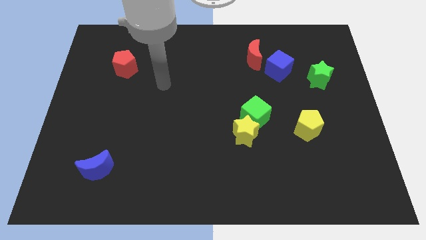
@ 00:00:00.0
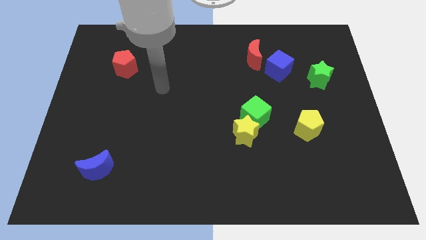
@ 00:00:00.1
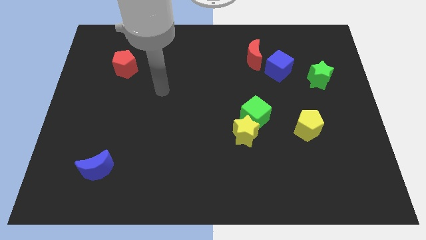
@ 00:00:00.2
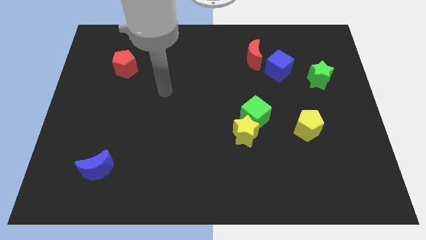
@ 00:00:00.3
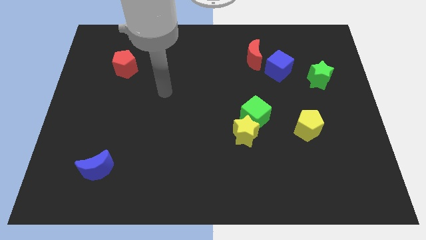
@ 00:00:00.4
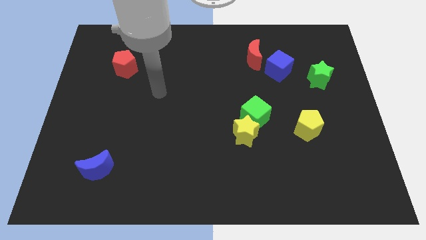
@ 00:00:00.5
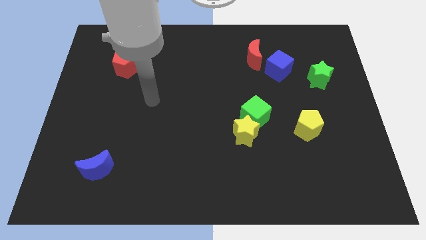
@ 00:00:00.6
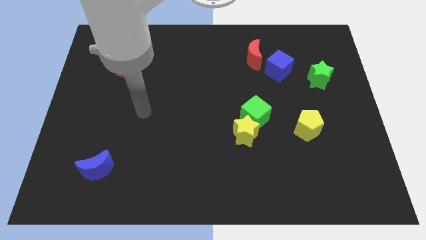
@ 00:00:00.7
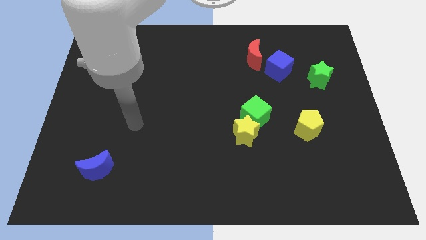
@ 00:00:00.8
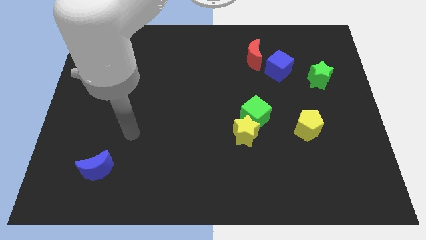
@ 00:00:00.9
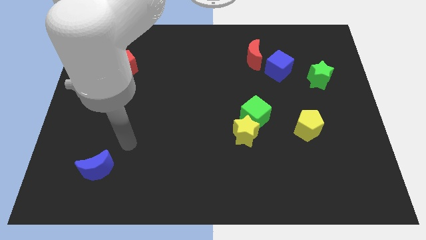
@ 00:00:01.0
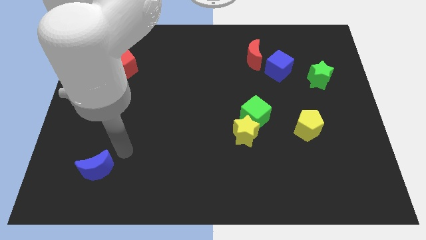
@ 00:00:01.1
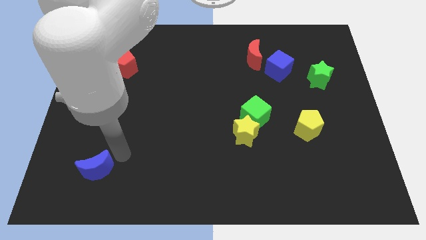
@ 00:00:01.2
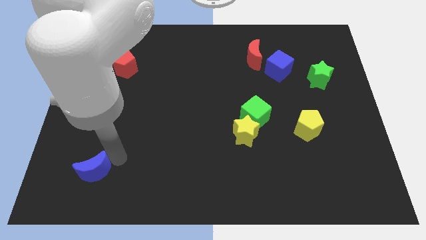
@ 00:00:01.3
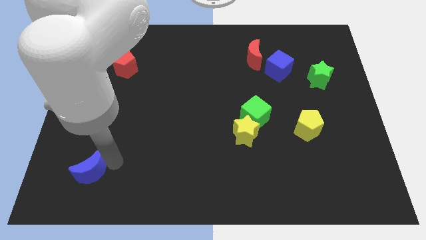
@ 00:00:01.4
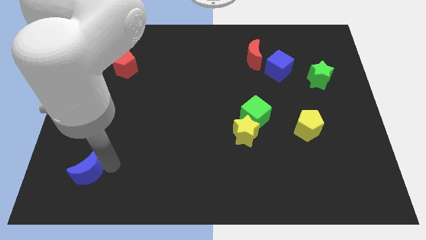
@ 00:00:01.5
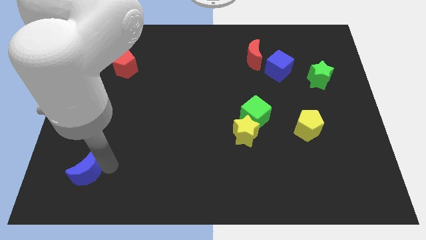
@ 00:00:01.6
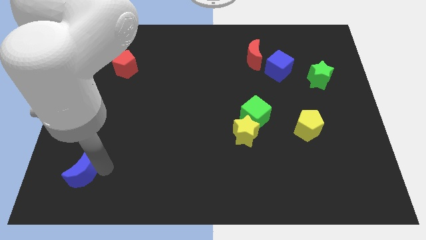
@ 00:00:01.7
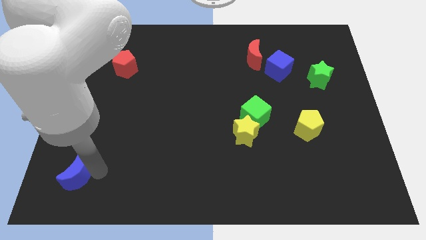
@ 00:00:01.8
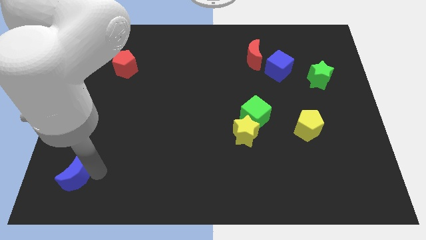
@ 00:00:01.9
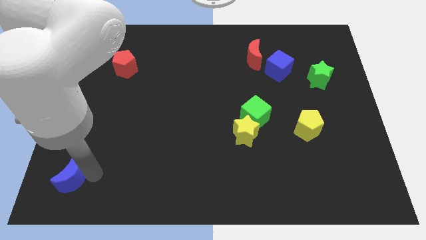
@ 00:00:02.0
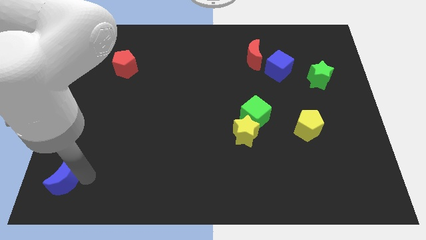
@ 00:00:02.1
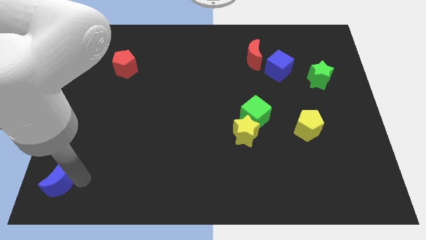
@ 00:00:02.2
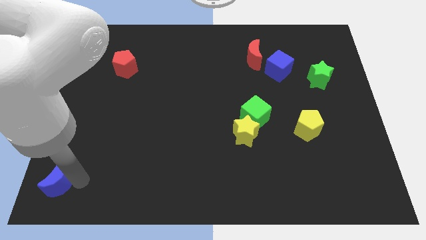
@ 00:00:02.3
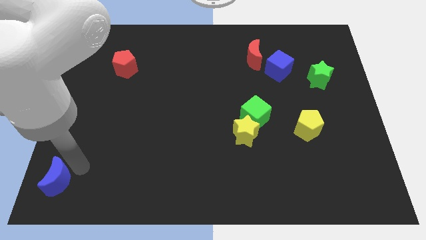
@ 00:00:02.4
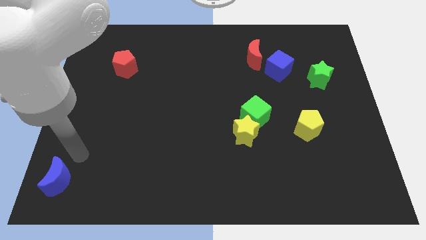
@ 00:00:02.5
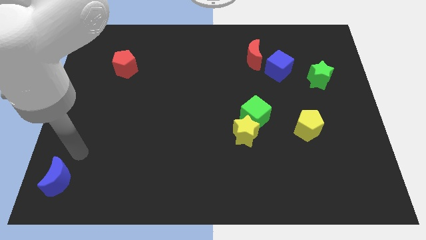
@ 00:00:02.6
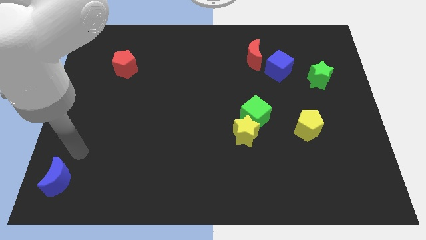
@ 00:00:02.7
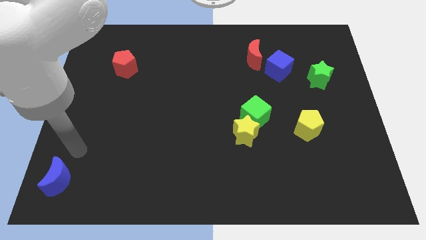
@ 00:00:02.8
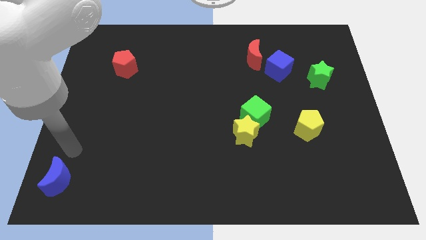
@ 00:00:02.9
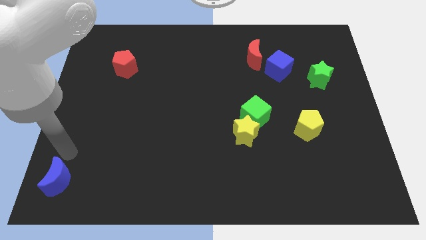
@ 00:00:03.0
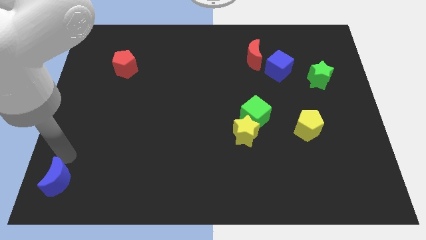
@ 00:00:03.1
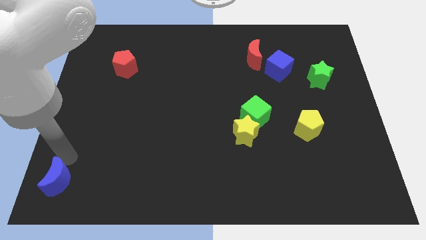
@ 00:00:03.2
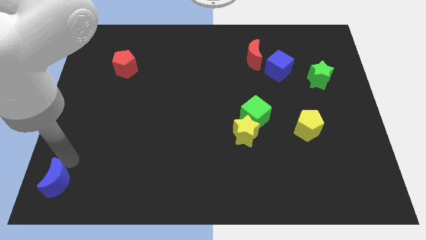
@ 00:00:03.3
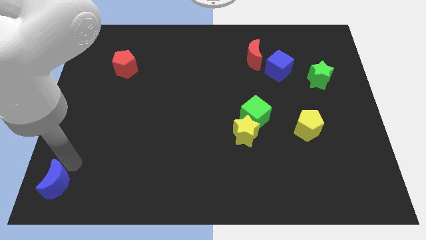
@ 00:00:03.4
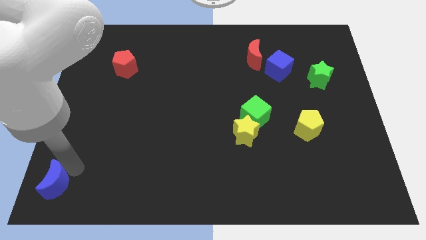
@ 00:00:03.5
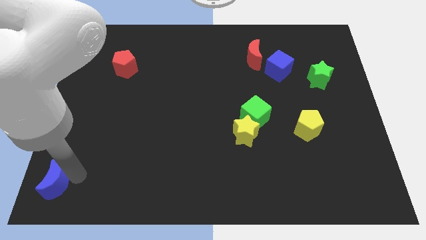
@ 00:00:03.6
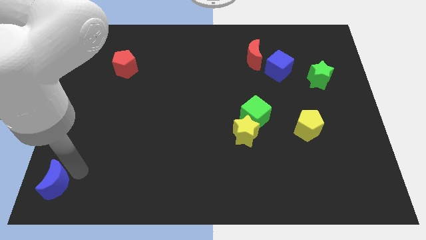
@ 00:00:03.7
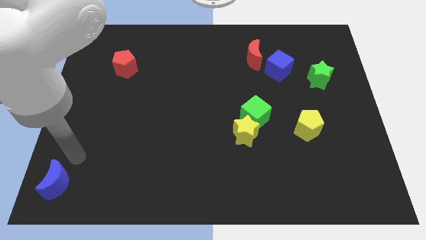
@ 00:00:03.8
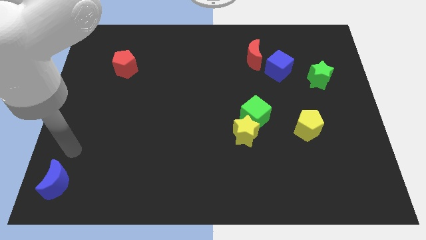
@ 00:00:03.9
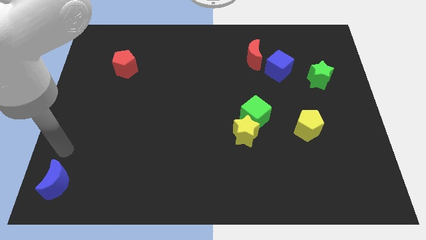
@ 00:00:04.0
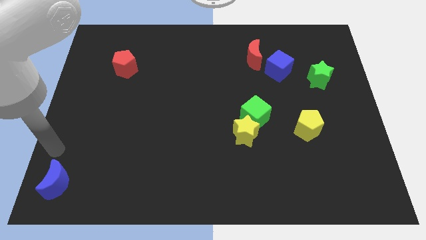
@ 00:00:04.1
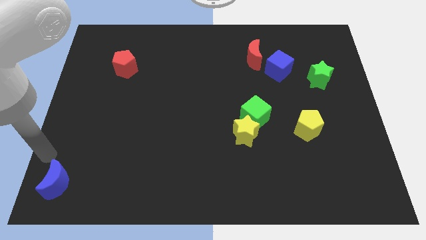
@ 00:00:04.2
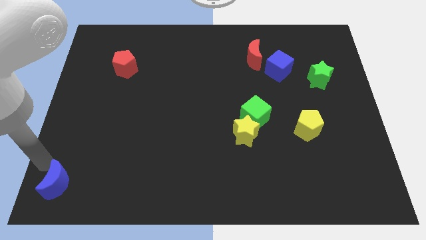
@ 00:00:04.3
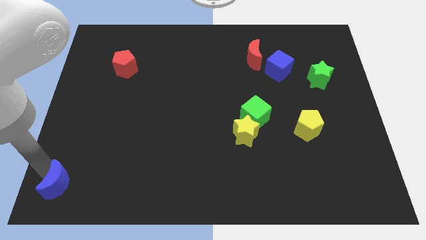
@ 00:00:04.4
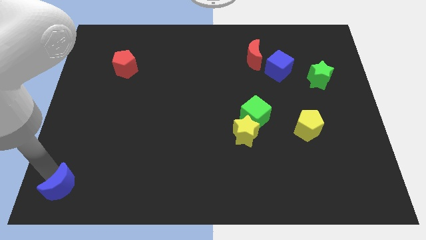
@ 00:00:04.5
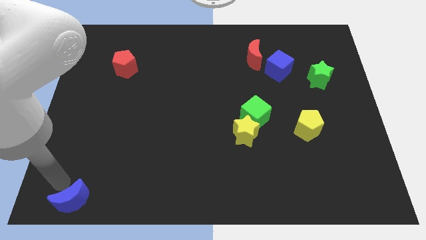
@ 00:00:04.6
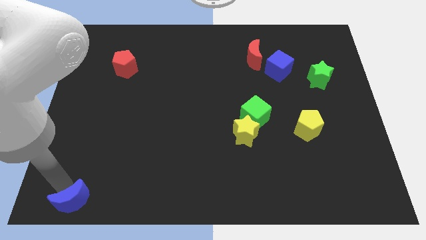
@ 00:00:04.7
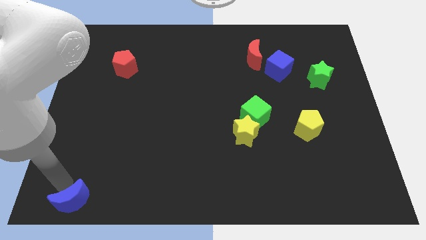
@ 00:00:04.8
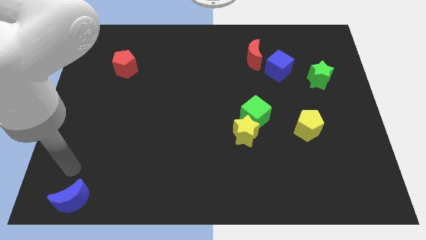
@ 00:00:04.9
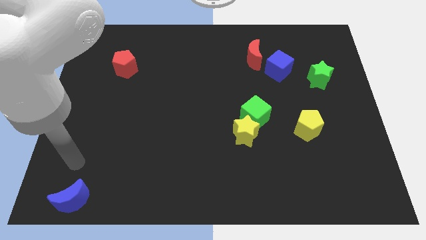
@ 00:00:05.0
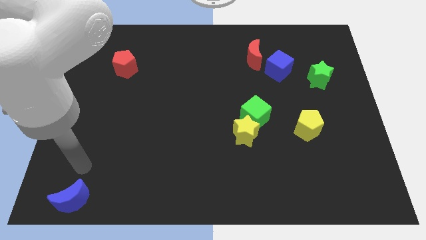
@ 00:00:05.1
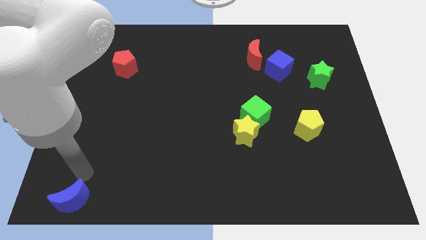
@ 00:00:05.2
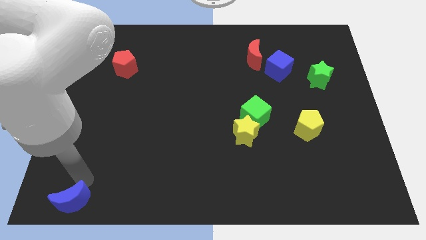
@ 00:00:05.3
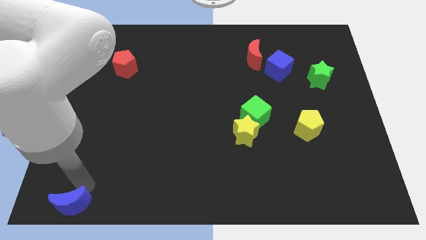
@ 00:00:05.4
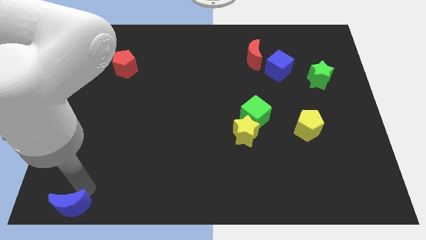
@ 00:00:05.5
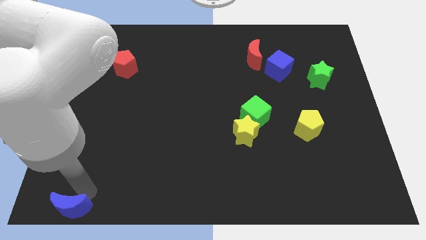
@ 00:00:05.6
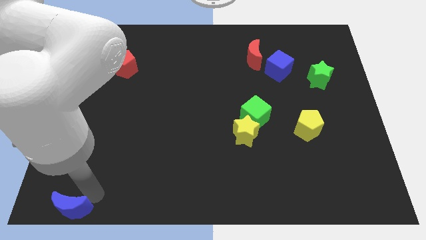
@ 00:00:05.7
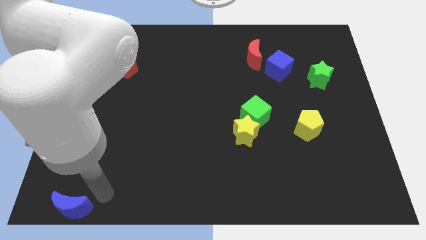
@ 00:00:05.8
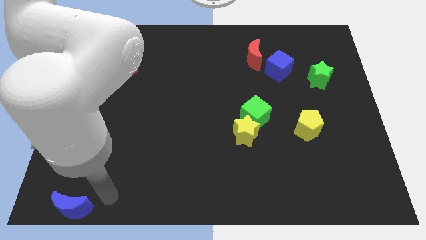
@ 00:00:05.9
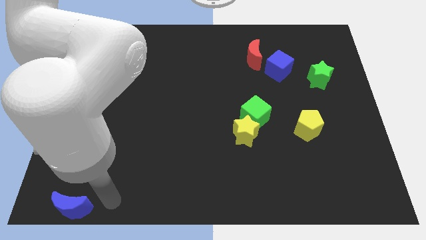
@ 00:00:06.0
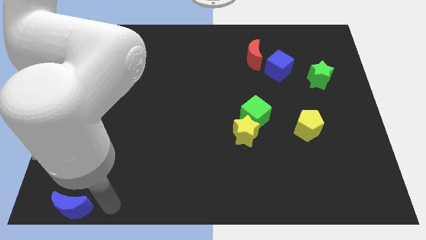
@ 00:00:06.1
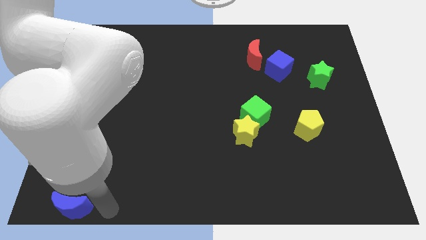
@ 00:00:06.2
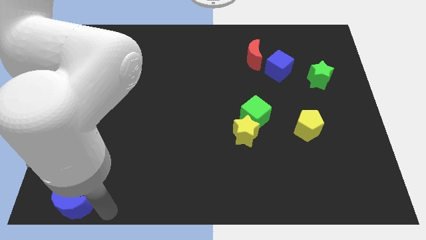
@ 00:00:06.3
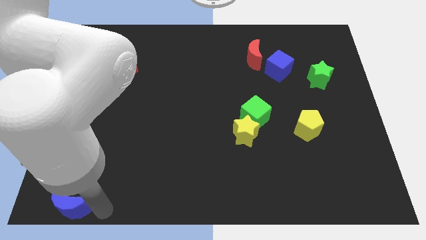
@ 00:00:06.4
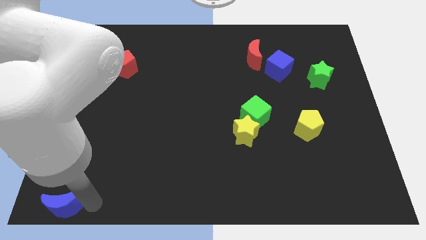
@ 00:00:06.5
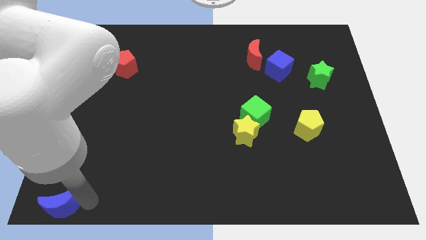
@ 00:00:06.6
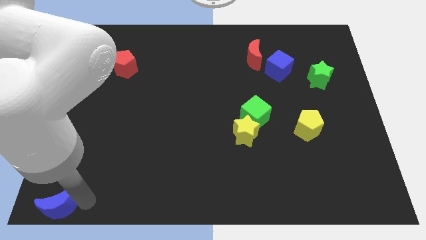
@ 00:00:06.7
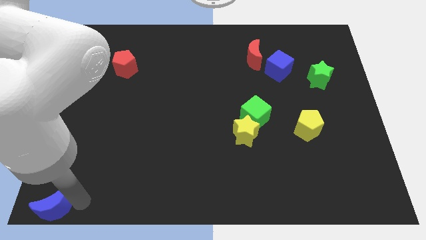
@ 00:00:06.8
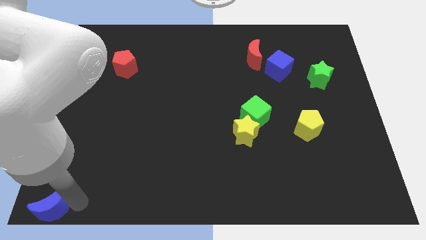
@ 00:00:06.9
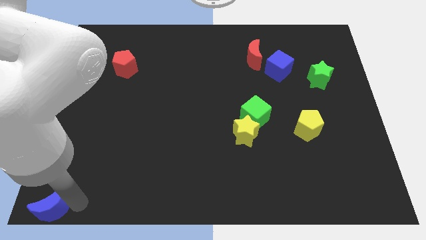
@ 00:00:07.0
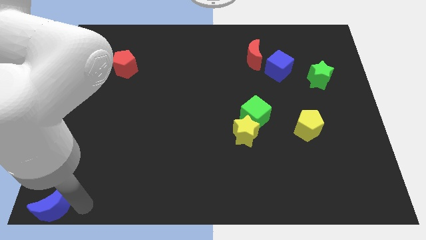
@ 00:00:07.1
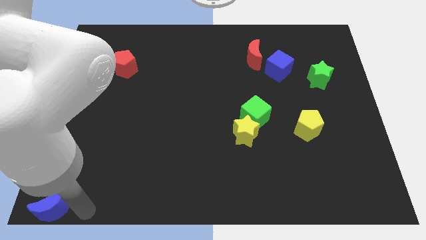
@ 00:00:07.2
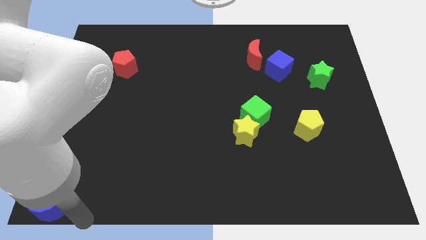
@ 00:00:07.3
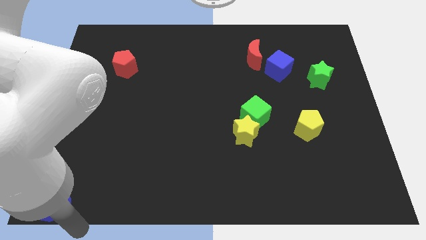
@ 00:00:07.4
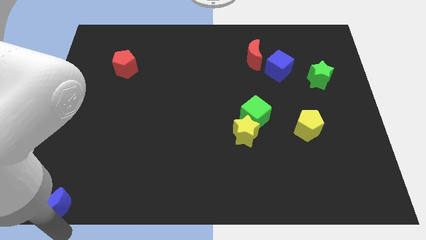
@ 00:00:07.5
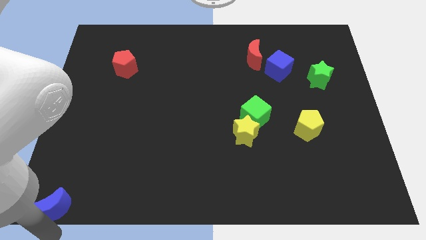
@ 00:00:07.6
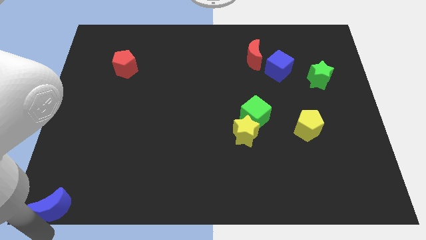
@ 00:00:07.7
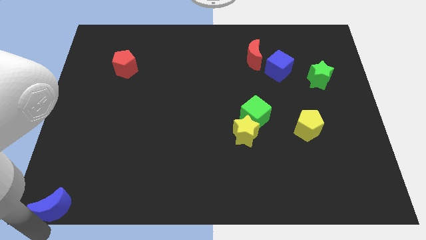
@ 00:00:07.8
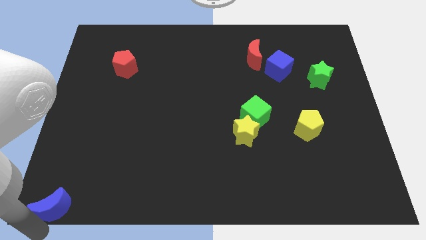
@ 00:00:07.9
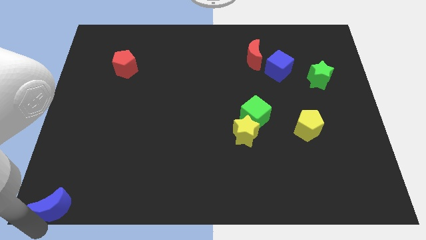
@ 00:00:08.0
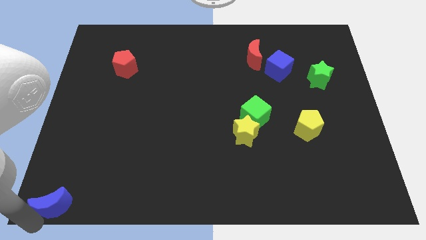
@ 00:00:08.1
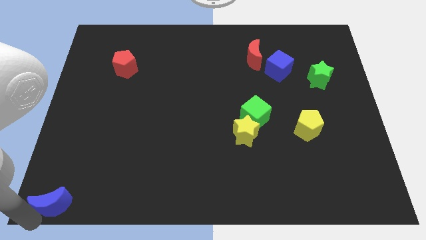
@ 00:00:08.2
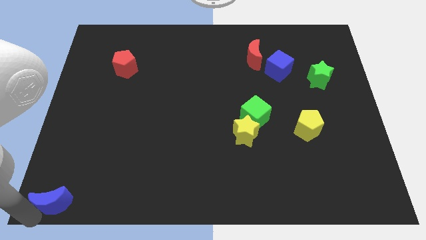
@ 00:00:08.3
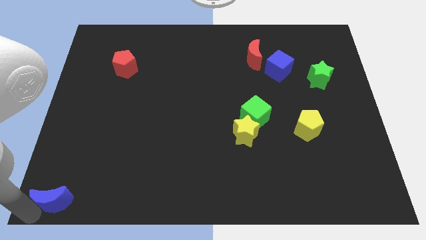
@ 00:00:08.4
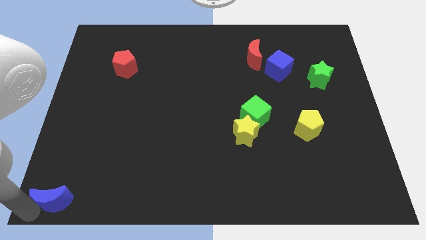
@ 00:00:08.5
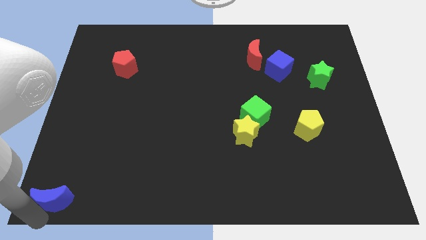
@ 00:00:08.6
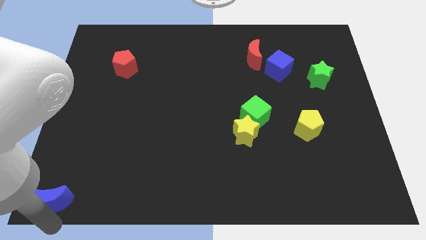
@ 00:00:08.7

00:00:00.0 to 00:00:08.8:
place the blue crescent at the bottom left corner of the board
